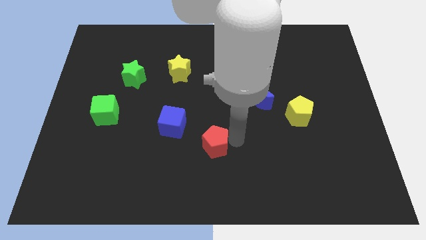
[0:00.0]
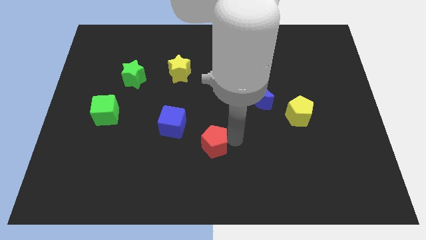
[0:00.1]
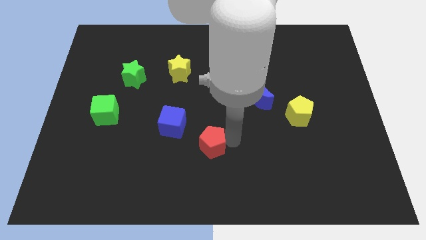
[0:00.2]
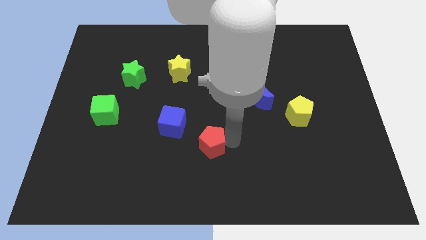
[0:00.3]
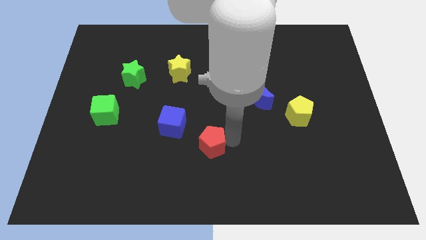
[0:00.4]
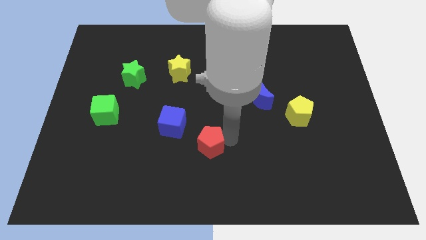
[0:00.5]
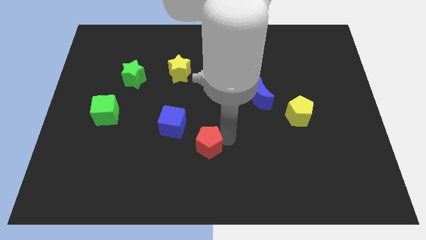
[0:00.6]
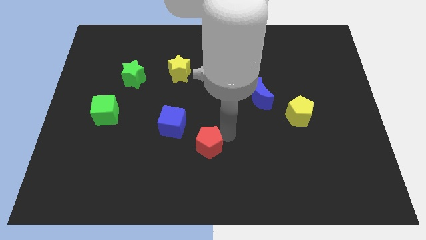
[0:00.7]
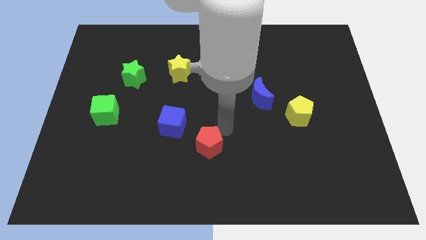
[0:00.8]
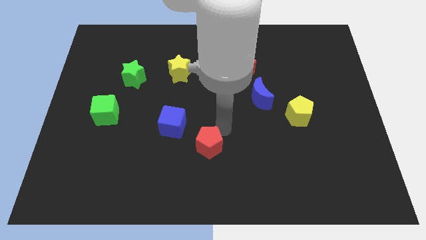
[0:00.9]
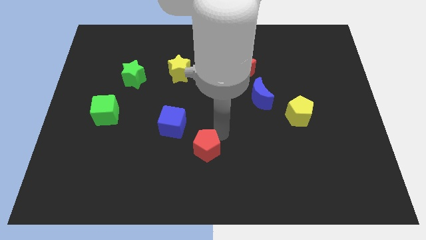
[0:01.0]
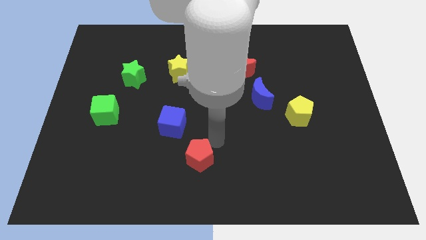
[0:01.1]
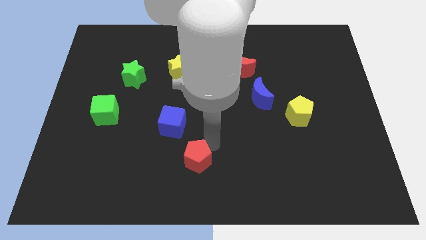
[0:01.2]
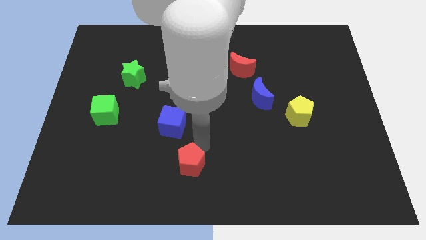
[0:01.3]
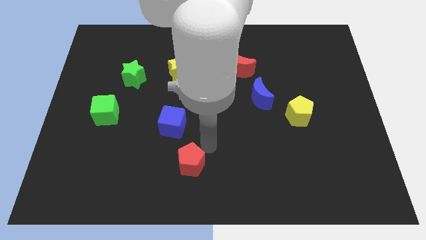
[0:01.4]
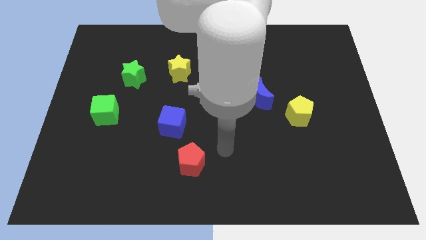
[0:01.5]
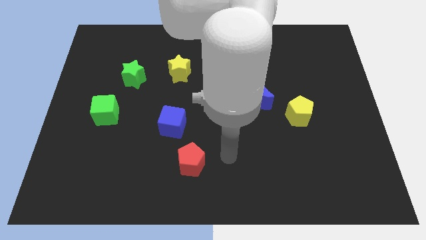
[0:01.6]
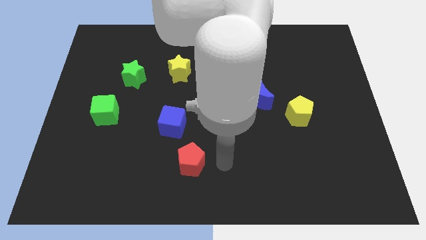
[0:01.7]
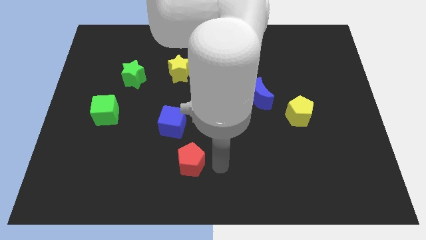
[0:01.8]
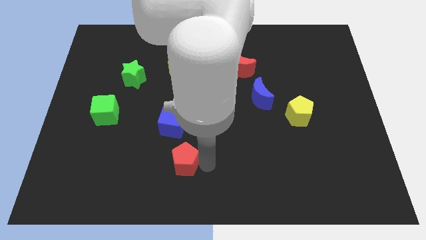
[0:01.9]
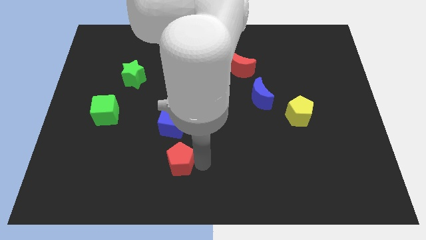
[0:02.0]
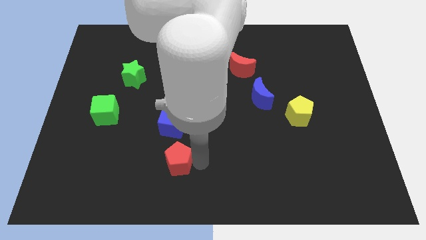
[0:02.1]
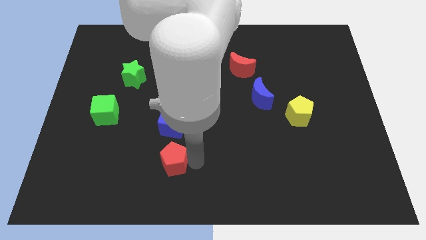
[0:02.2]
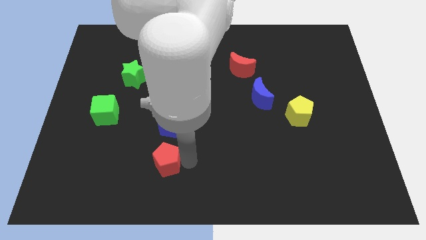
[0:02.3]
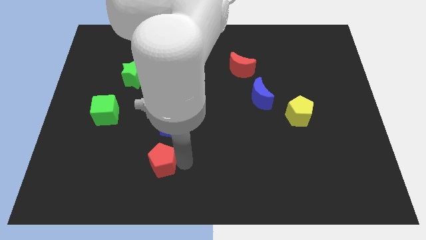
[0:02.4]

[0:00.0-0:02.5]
move the red pentagon below the blue cube

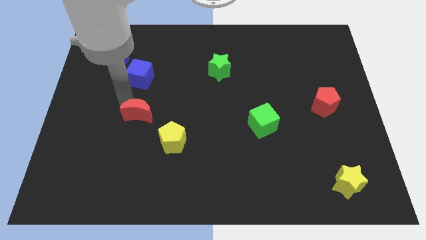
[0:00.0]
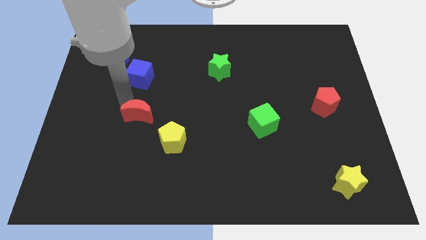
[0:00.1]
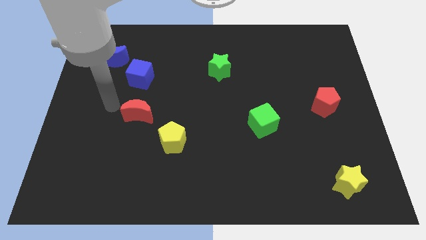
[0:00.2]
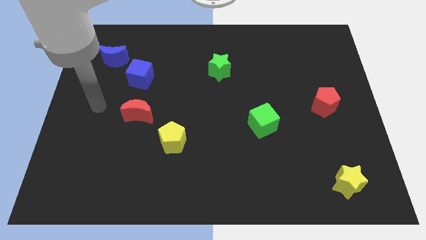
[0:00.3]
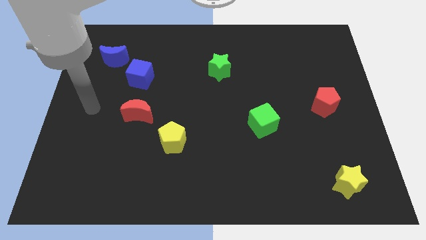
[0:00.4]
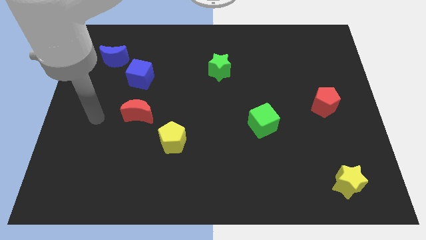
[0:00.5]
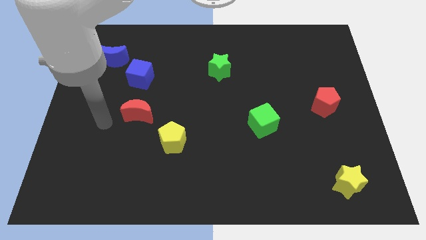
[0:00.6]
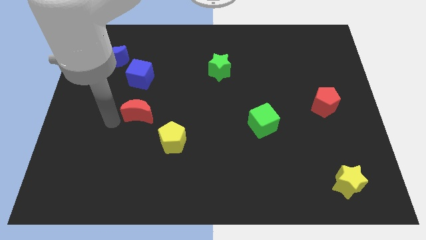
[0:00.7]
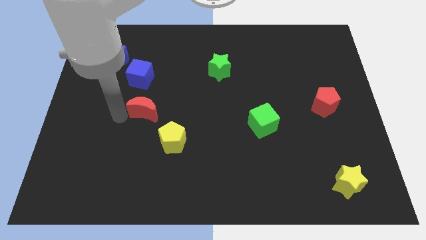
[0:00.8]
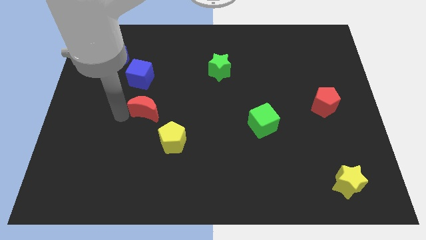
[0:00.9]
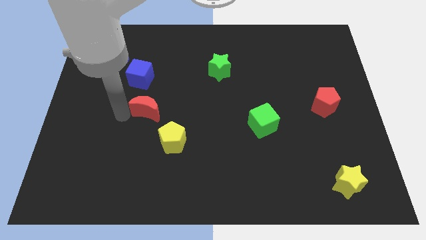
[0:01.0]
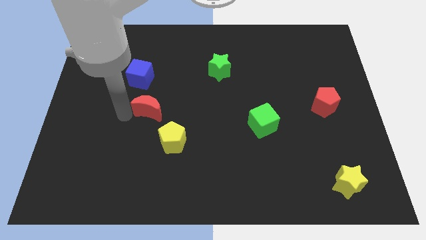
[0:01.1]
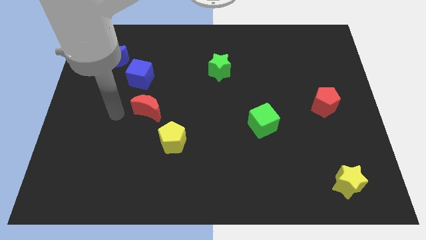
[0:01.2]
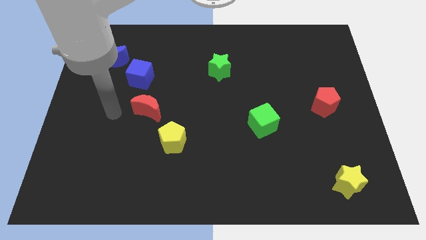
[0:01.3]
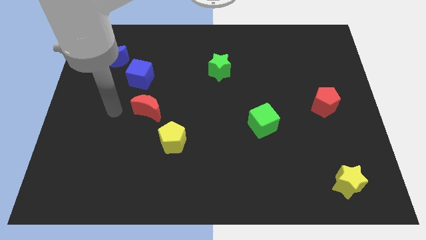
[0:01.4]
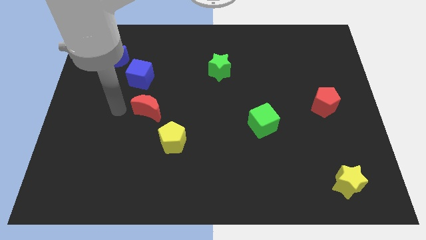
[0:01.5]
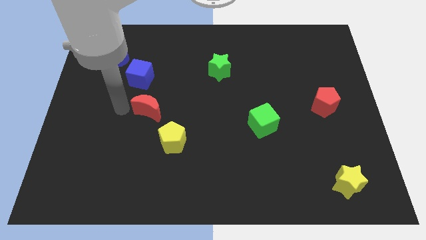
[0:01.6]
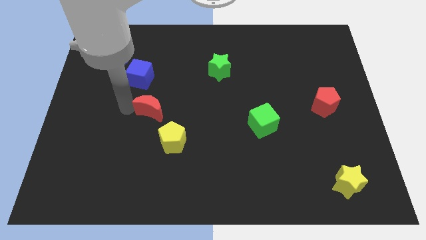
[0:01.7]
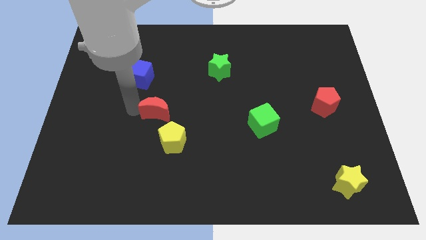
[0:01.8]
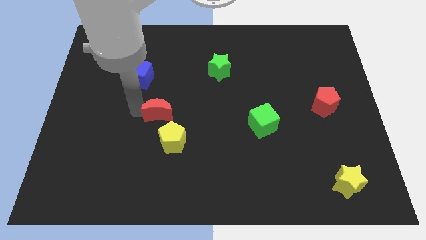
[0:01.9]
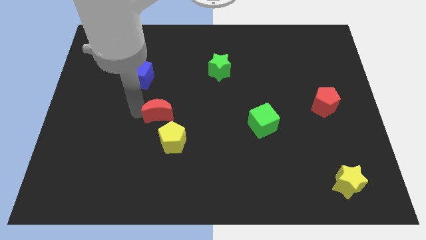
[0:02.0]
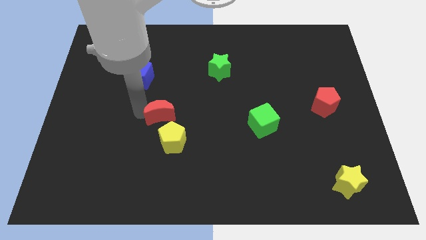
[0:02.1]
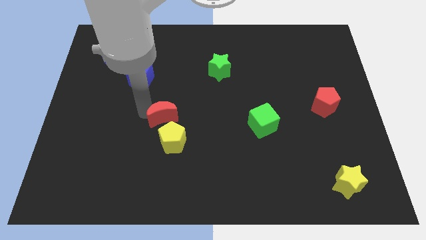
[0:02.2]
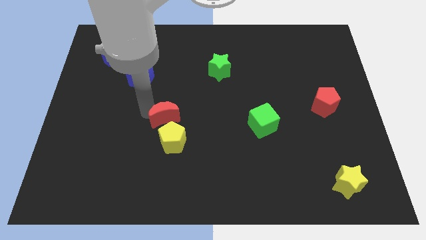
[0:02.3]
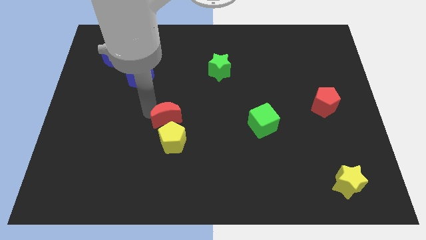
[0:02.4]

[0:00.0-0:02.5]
push the red moon close to the yellow pentagon

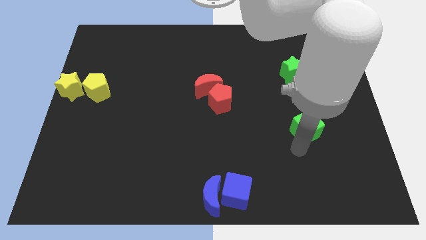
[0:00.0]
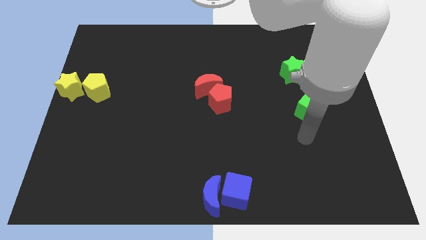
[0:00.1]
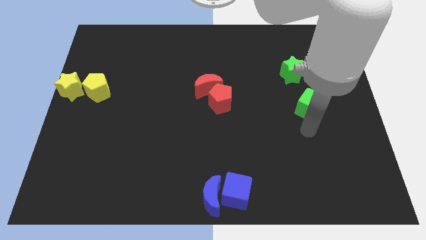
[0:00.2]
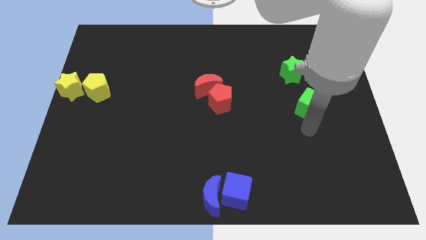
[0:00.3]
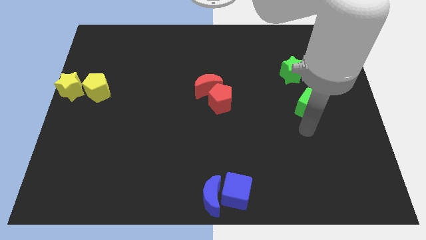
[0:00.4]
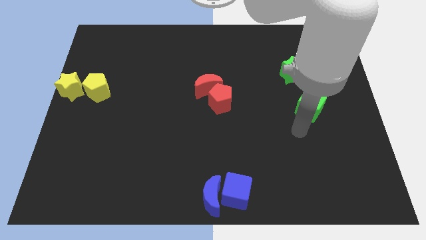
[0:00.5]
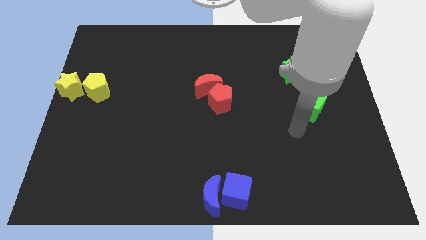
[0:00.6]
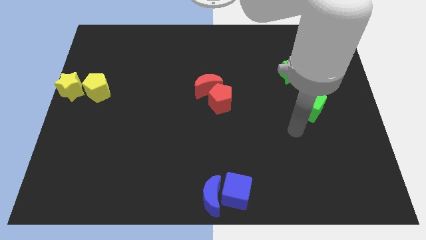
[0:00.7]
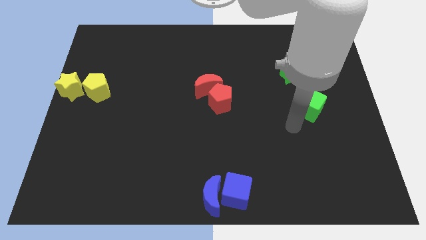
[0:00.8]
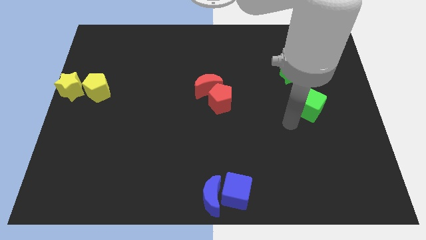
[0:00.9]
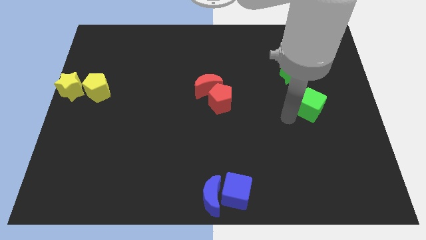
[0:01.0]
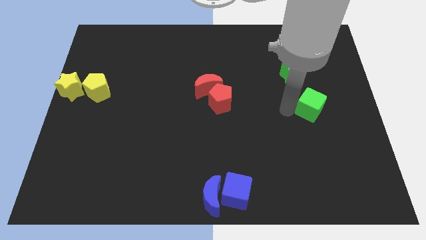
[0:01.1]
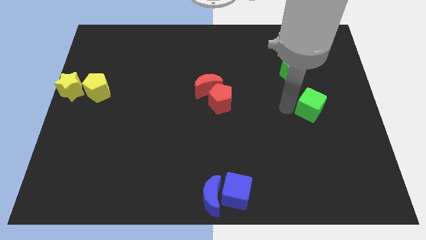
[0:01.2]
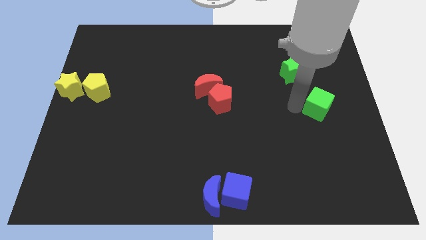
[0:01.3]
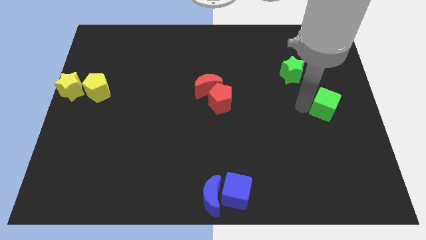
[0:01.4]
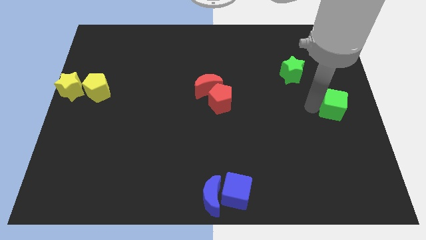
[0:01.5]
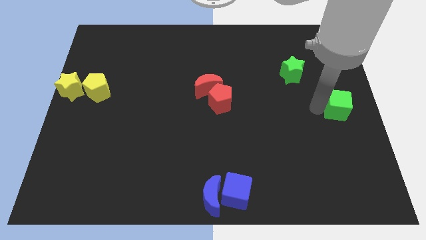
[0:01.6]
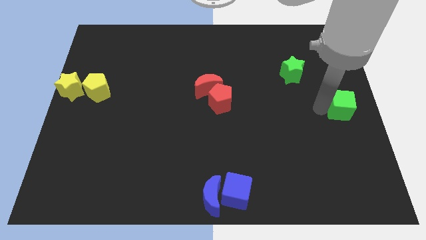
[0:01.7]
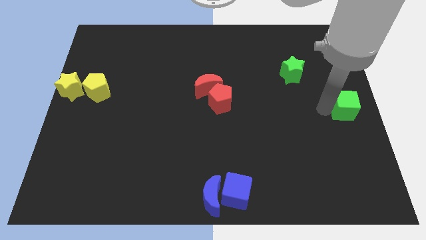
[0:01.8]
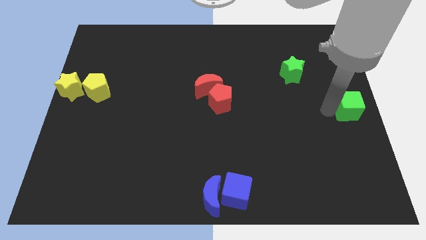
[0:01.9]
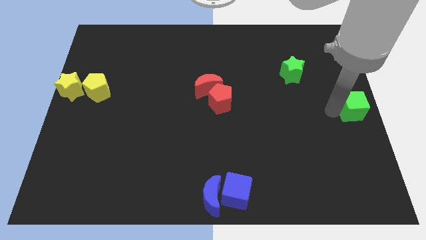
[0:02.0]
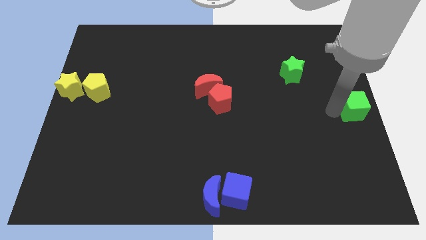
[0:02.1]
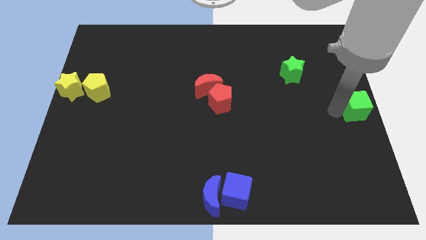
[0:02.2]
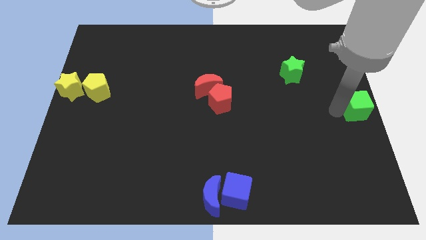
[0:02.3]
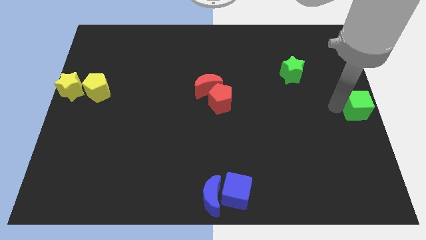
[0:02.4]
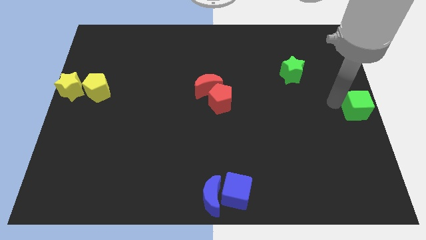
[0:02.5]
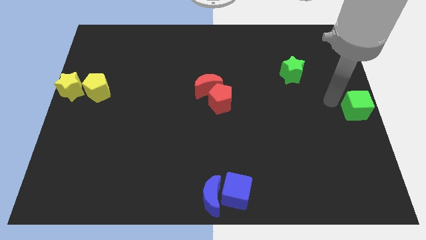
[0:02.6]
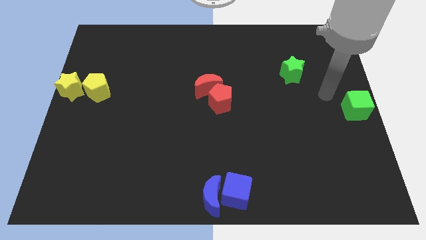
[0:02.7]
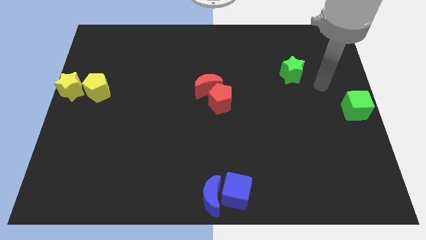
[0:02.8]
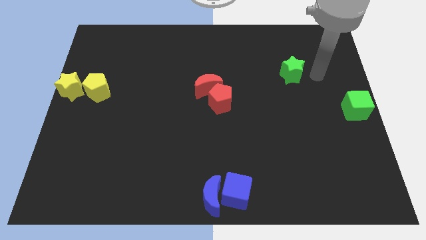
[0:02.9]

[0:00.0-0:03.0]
move the green cube to the center of the board

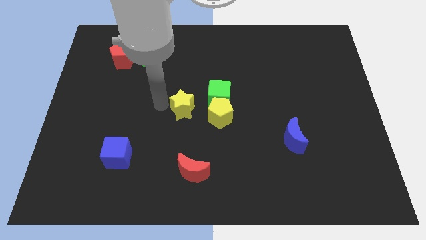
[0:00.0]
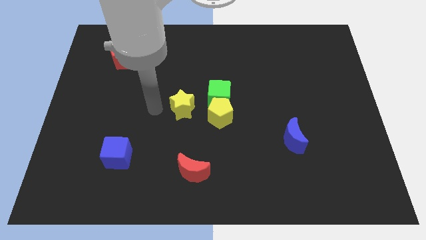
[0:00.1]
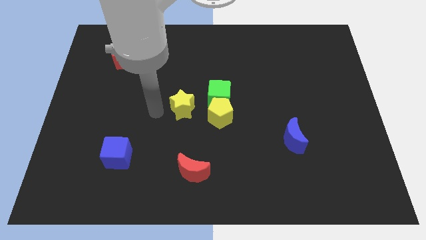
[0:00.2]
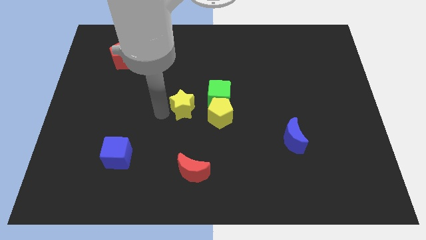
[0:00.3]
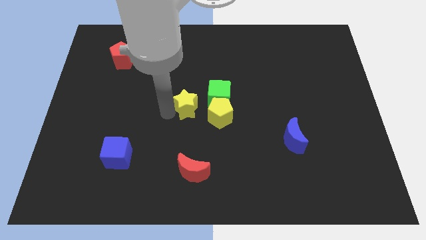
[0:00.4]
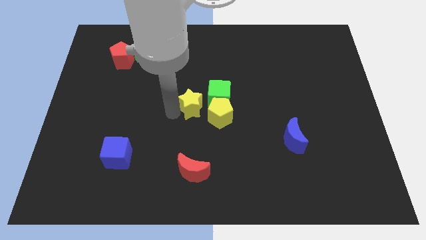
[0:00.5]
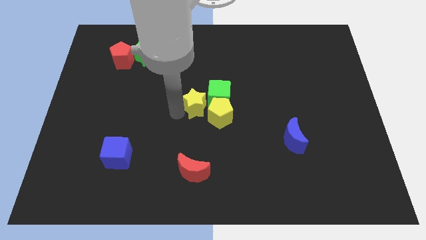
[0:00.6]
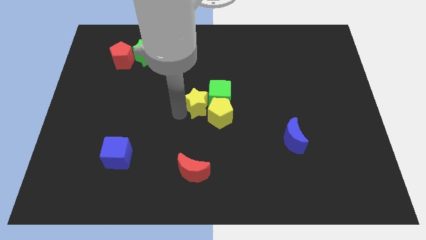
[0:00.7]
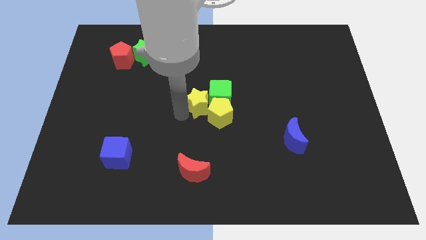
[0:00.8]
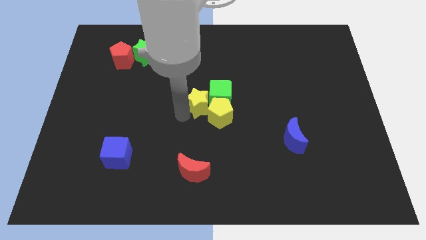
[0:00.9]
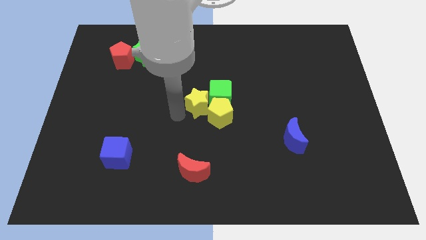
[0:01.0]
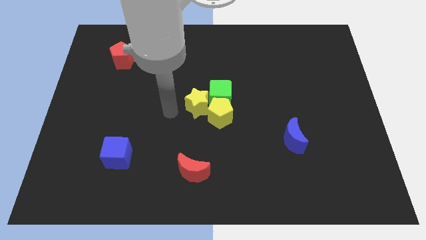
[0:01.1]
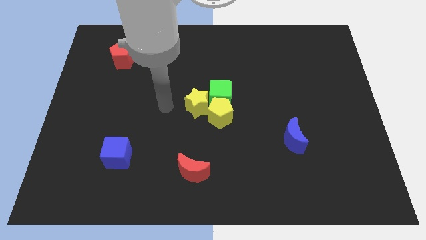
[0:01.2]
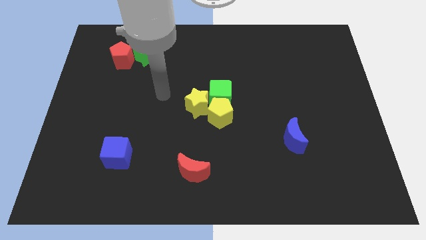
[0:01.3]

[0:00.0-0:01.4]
move the yellow star into the green cube
